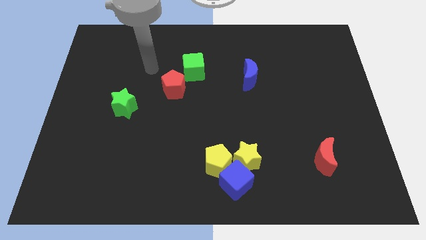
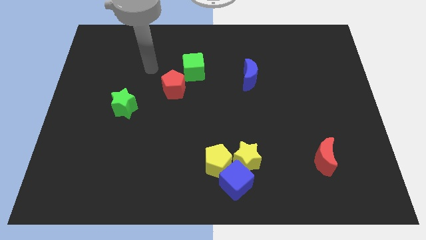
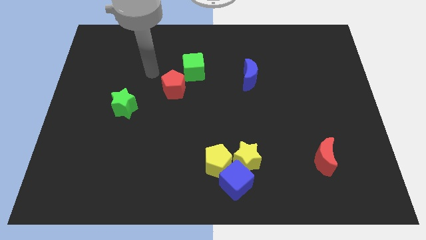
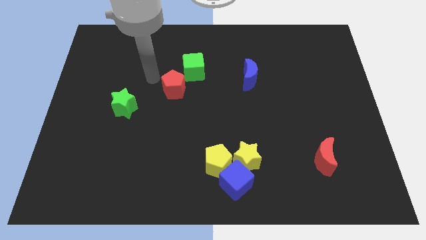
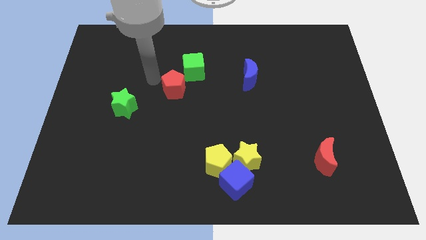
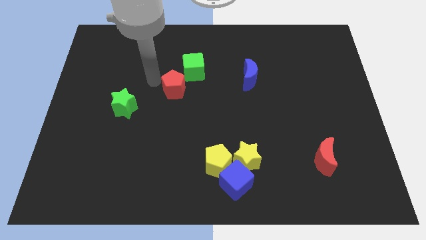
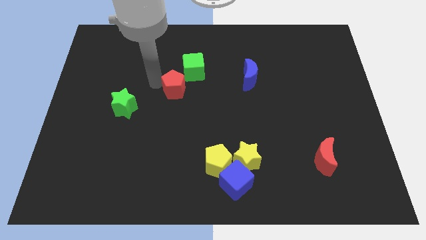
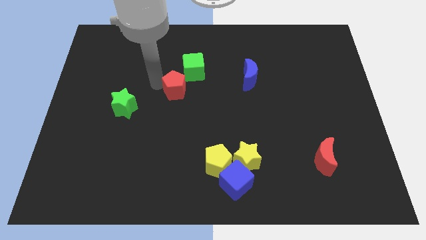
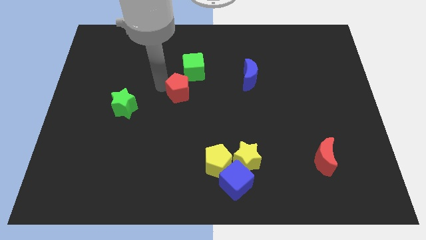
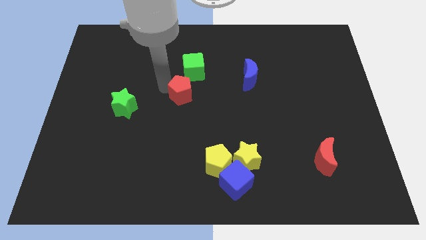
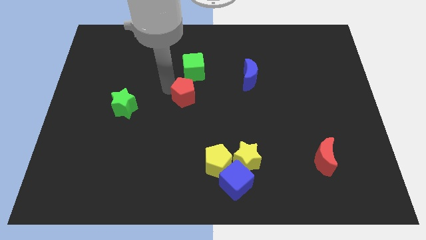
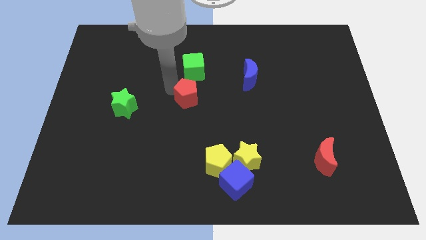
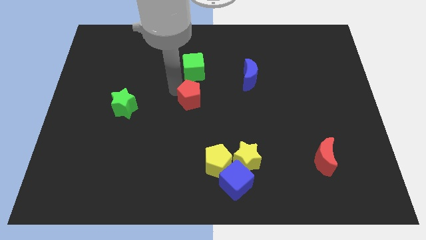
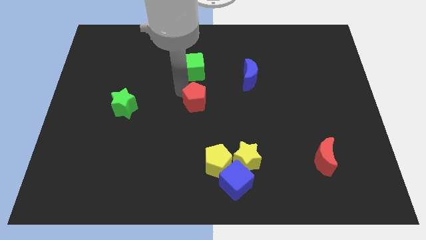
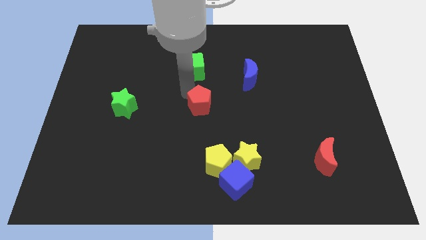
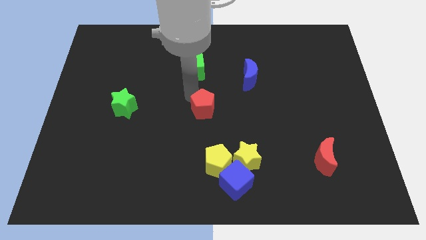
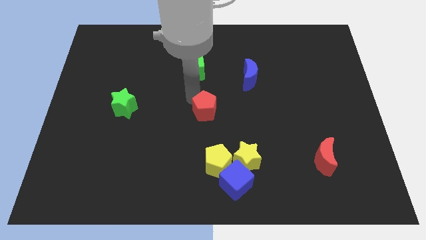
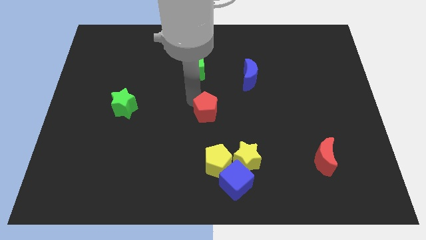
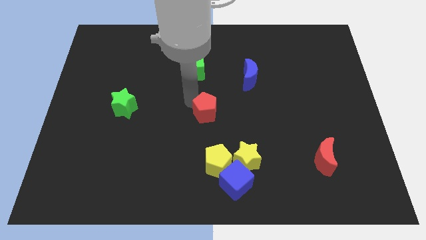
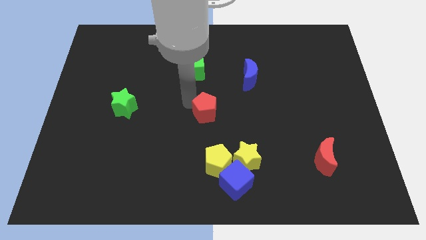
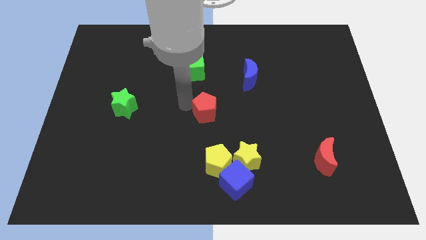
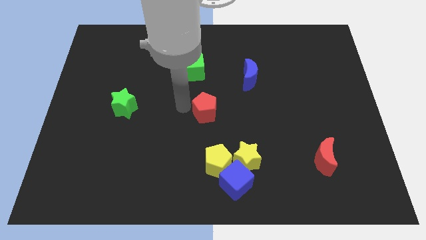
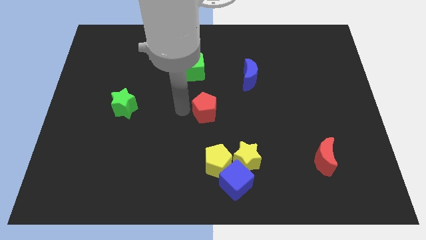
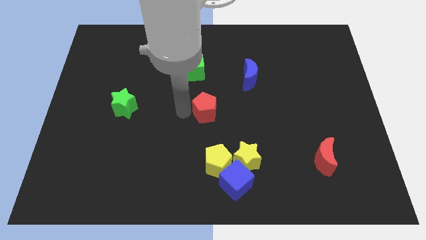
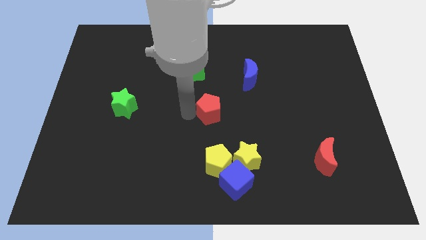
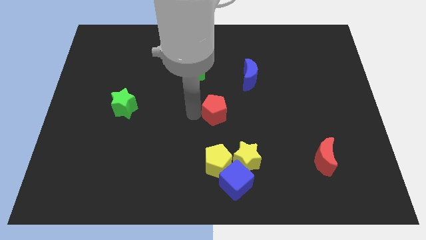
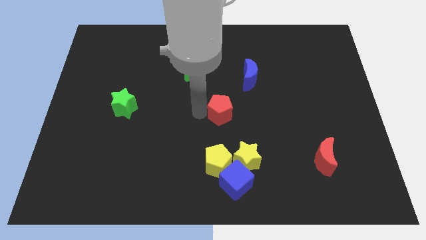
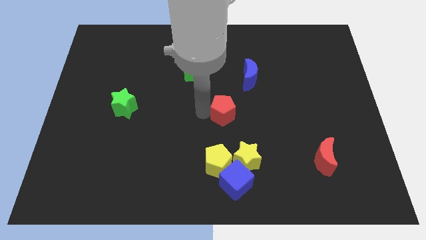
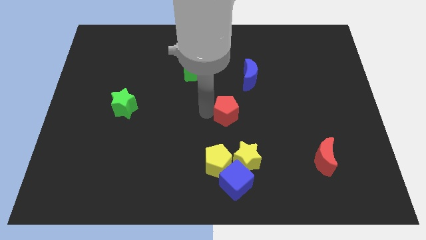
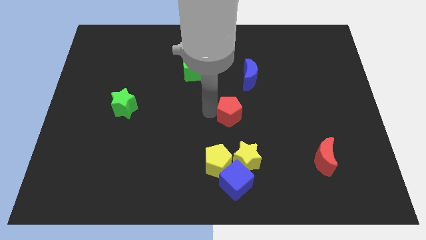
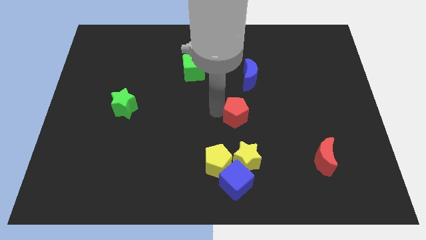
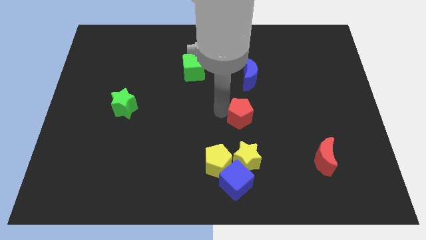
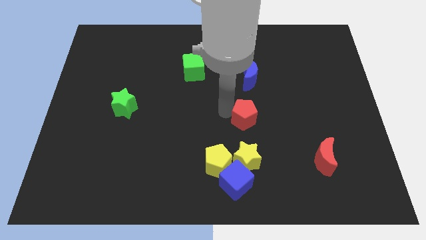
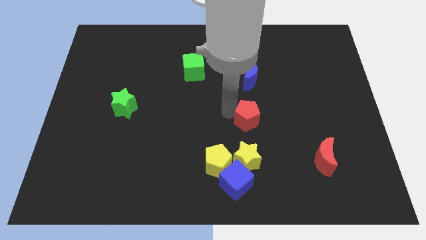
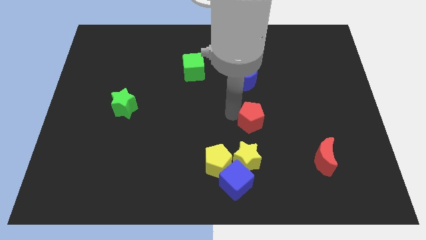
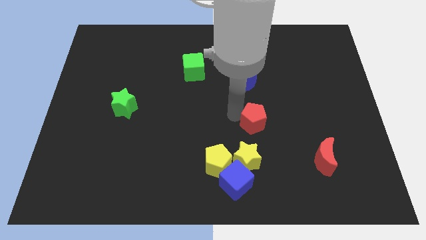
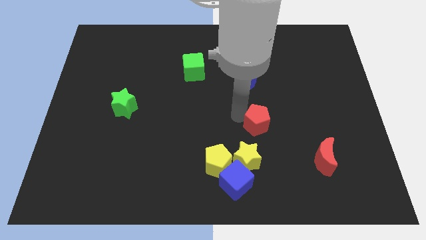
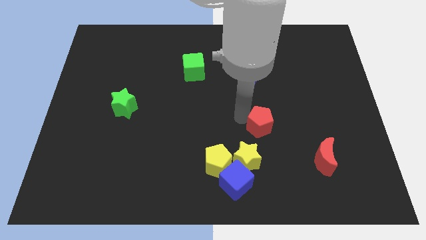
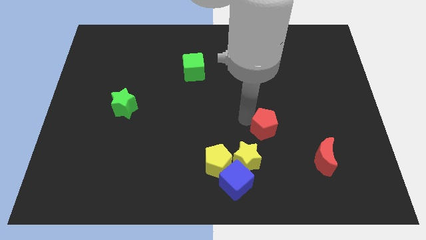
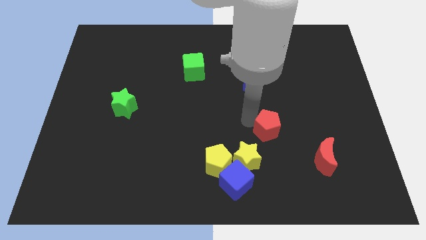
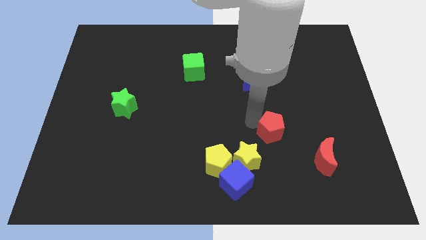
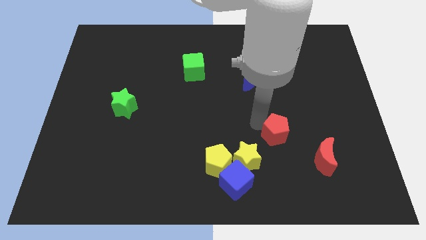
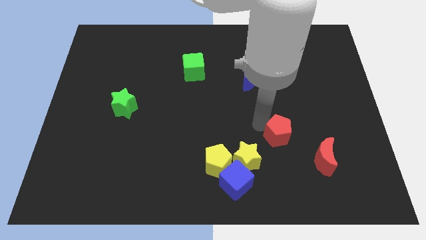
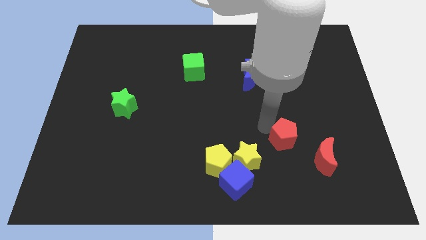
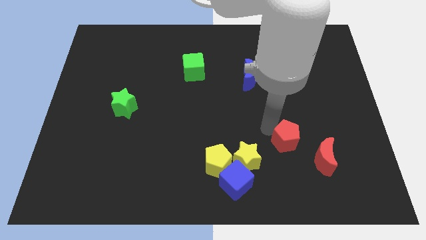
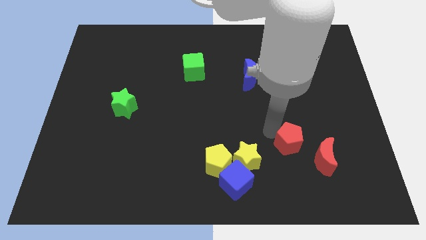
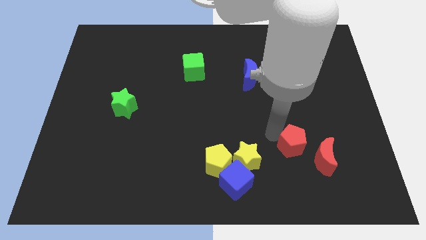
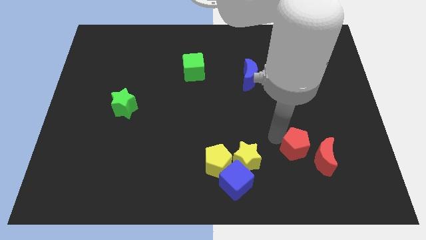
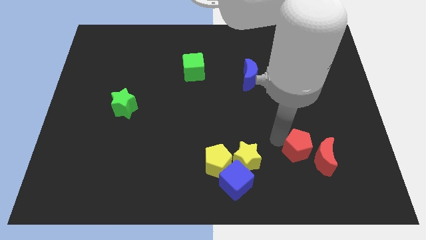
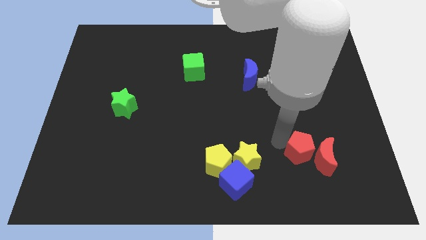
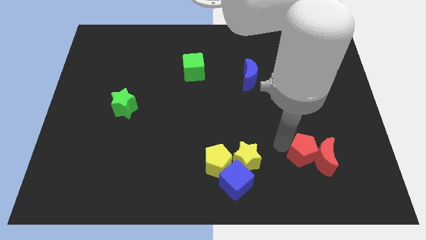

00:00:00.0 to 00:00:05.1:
move the red pentagon close to the red moon

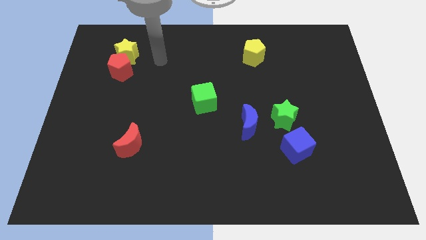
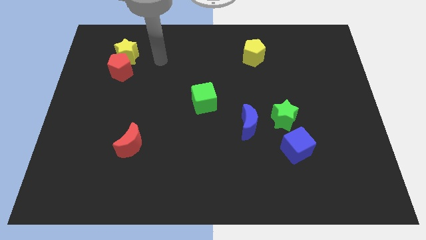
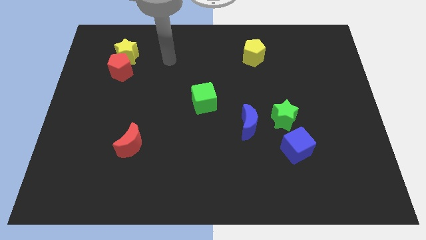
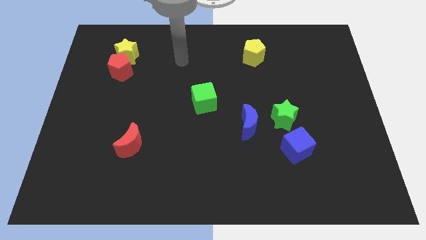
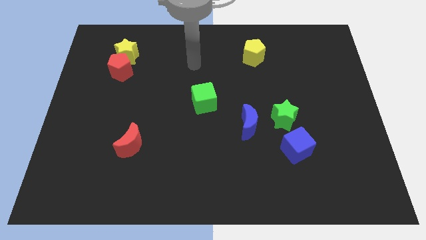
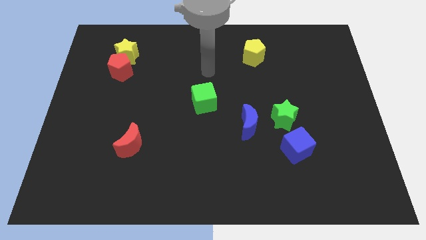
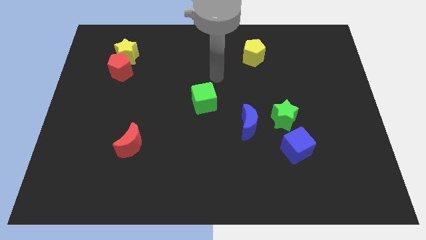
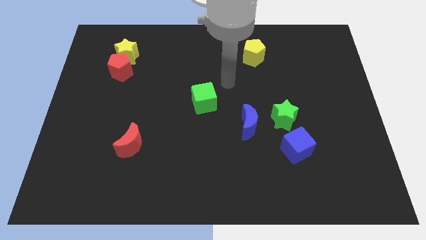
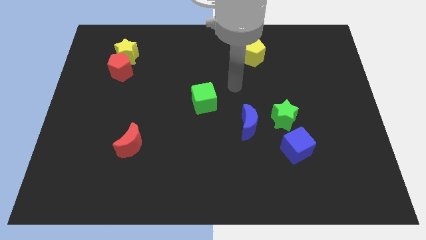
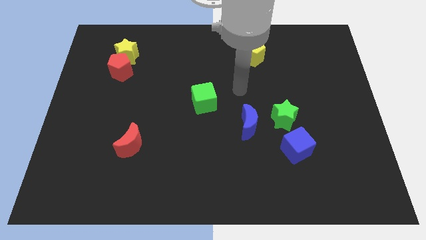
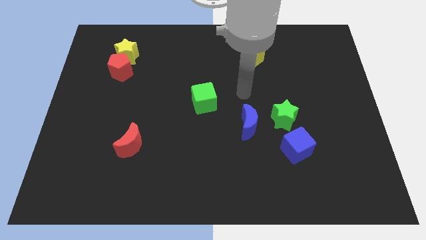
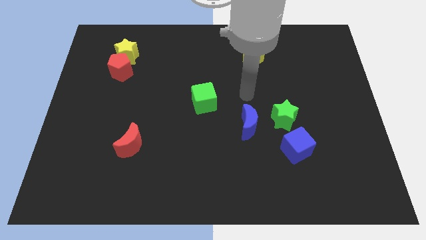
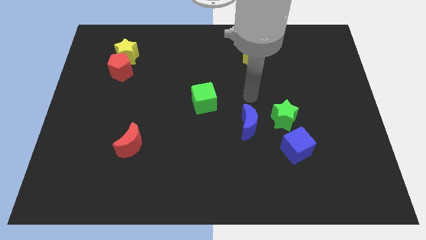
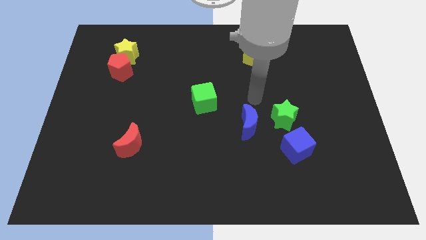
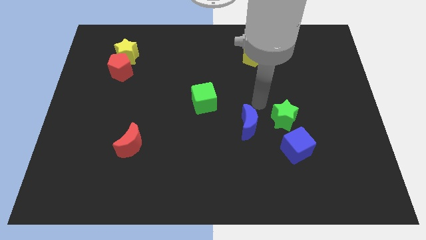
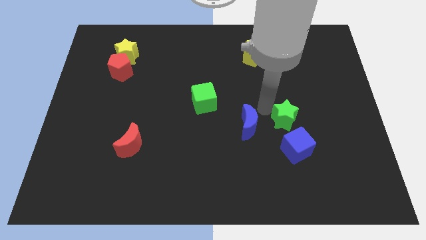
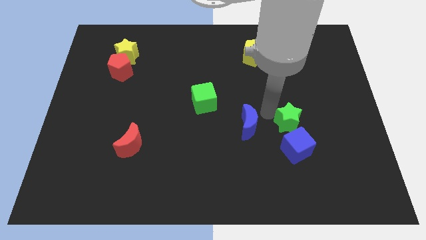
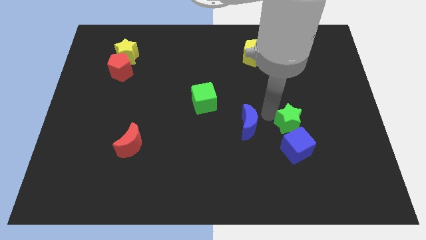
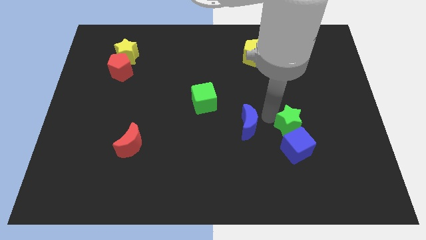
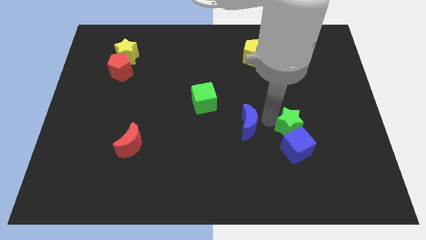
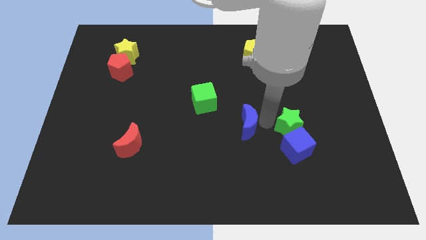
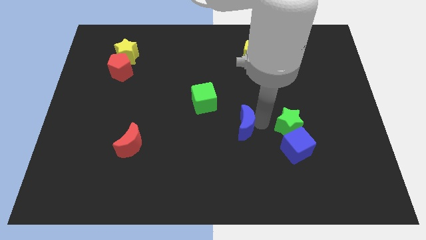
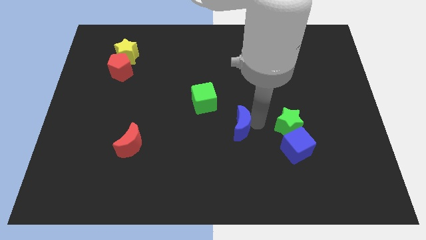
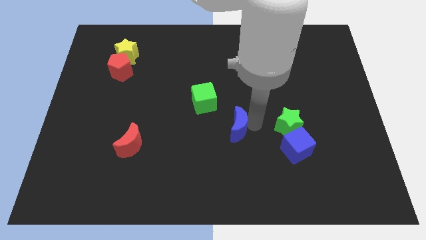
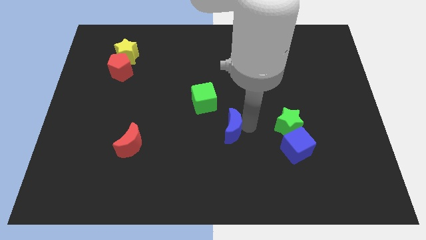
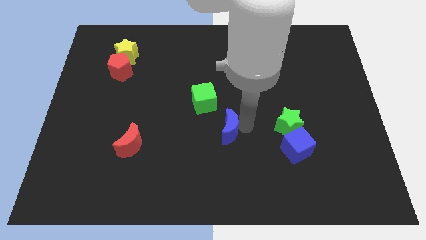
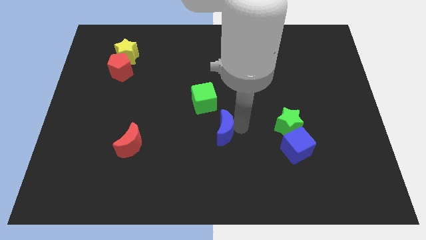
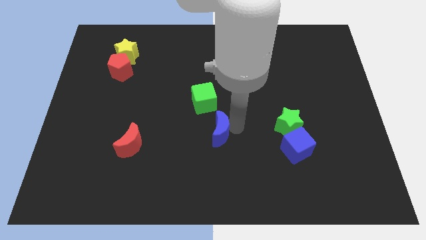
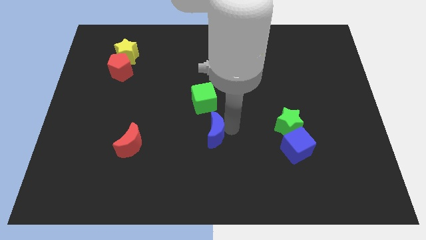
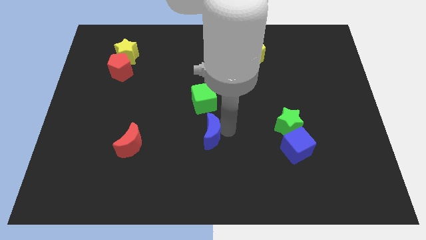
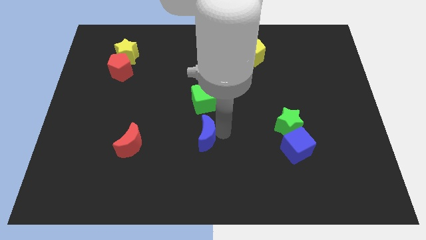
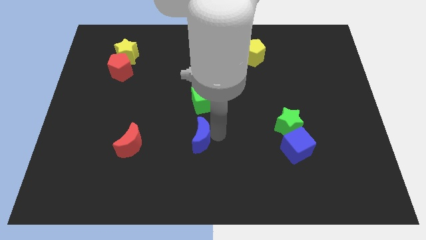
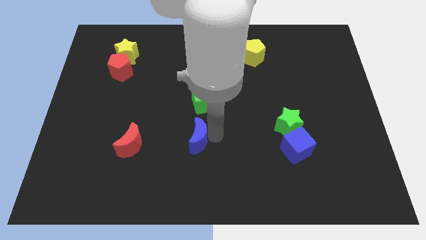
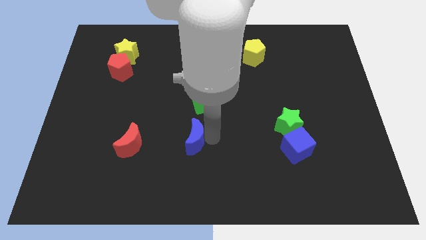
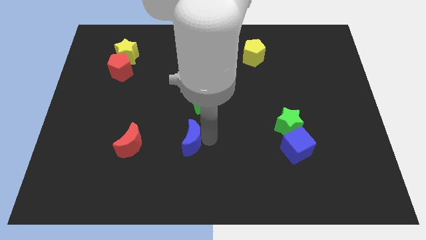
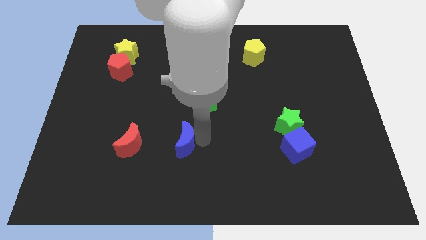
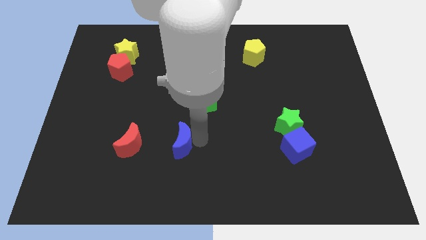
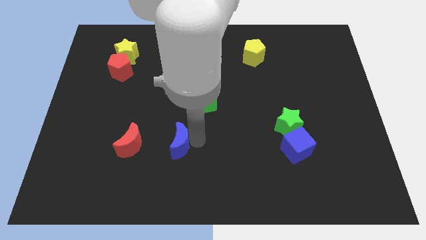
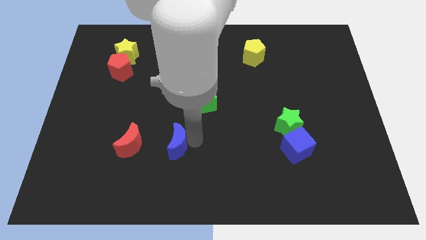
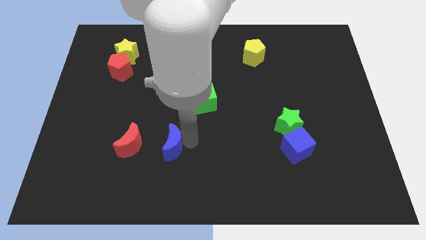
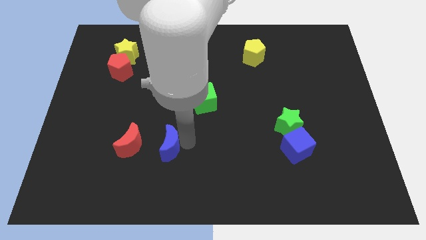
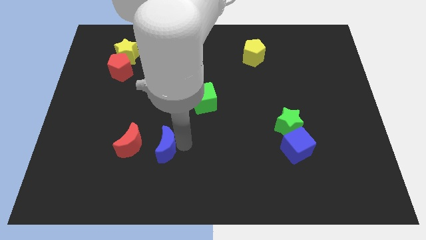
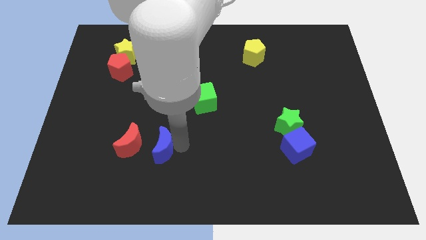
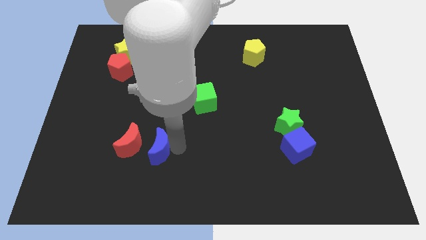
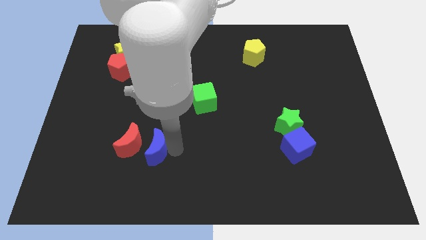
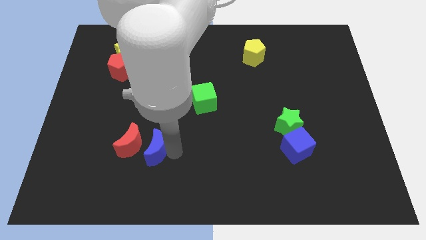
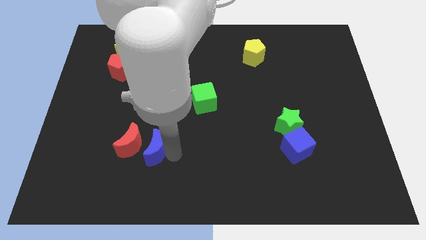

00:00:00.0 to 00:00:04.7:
put the blue moon towards the red moon
